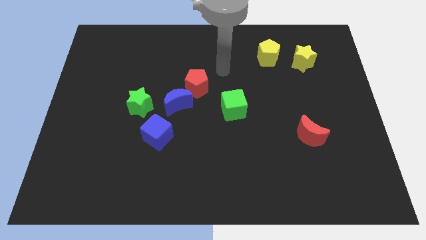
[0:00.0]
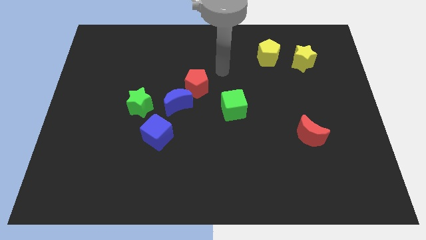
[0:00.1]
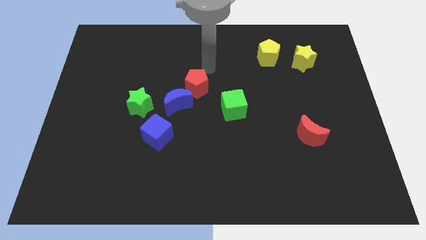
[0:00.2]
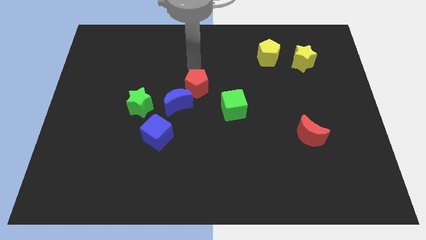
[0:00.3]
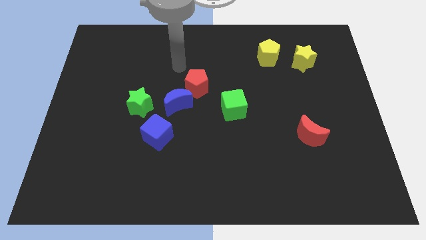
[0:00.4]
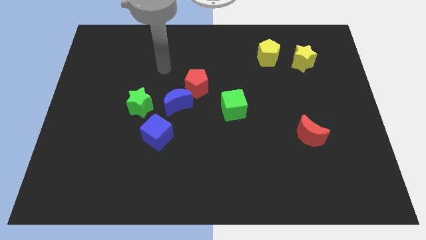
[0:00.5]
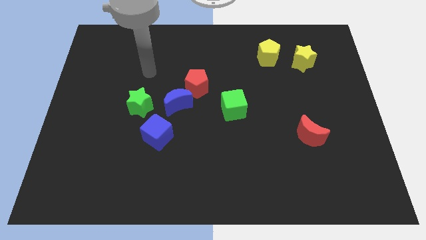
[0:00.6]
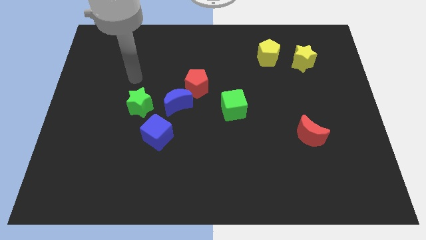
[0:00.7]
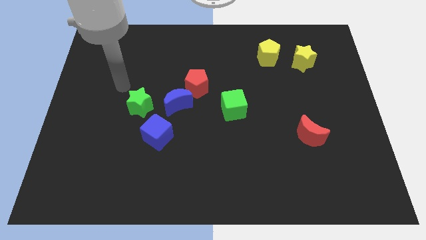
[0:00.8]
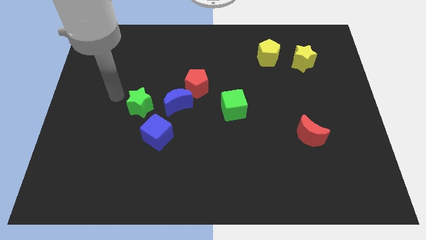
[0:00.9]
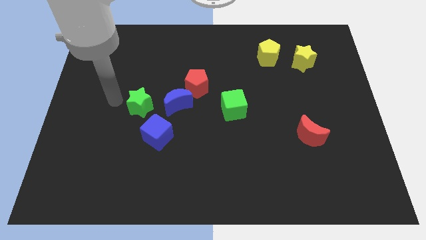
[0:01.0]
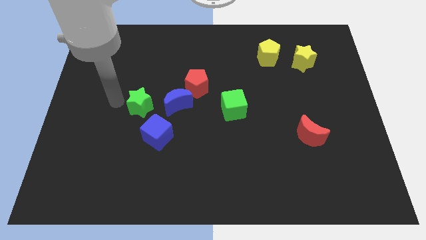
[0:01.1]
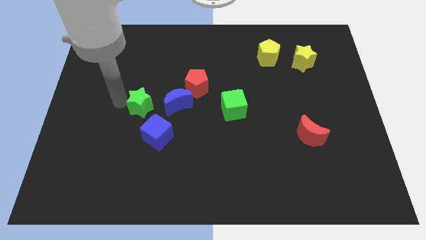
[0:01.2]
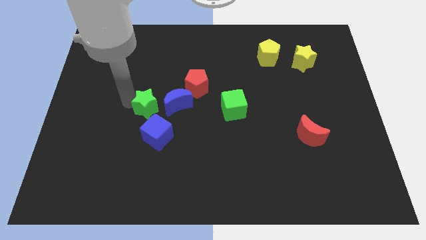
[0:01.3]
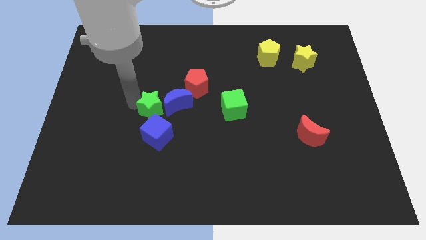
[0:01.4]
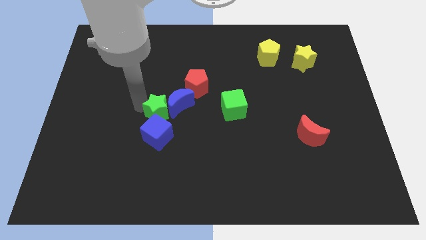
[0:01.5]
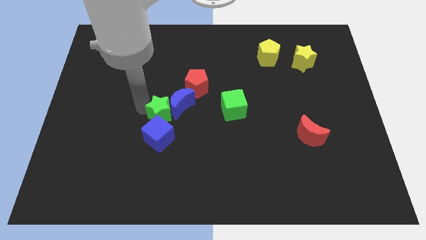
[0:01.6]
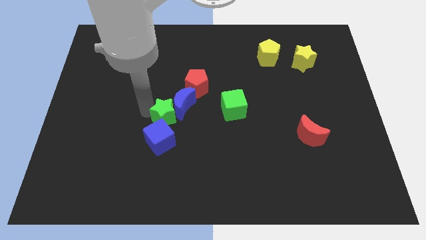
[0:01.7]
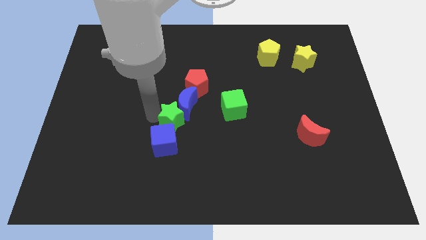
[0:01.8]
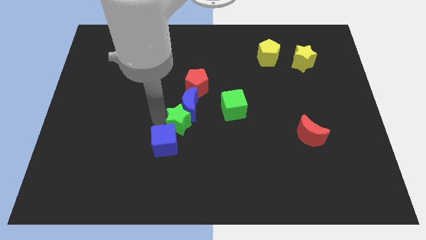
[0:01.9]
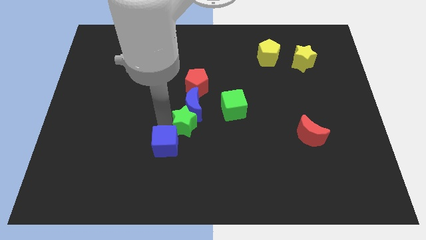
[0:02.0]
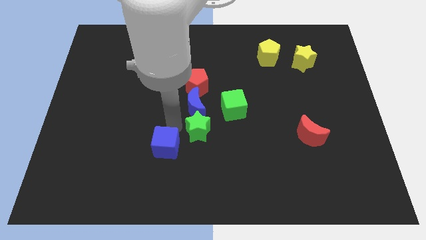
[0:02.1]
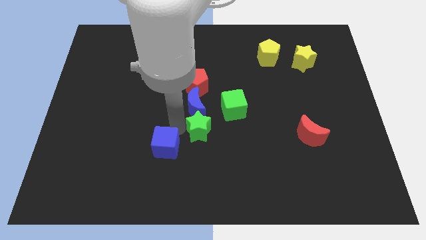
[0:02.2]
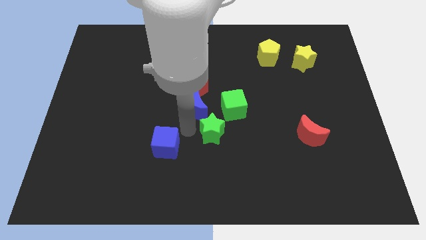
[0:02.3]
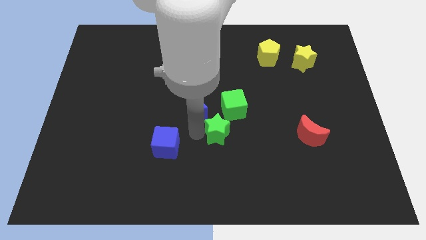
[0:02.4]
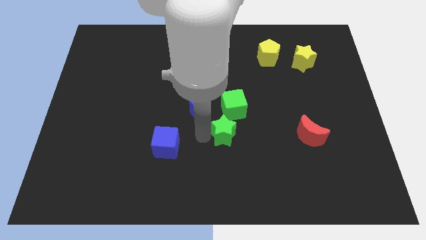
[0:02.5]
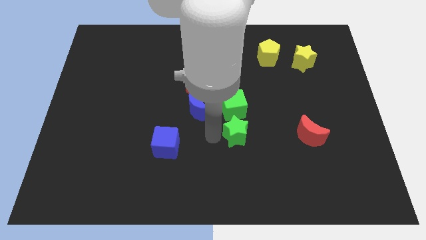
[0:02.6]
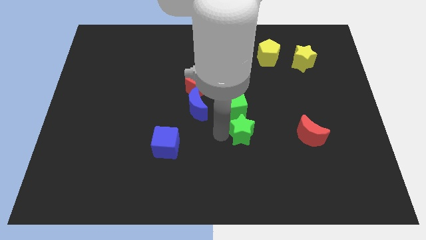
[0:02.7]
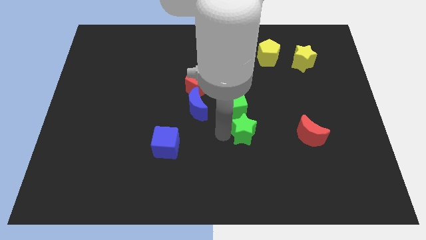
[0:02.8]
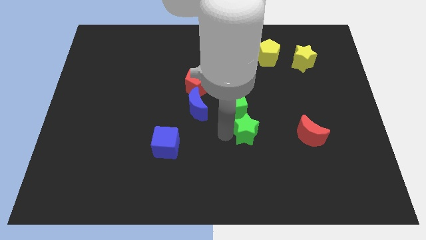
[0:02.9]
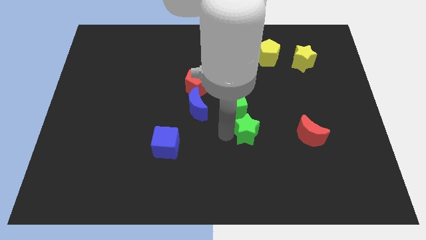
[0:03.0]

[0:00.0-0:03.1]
move the green star below to the green cube

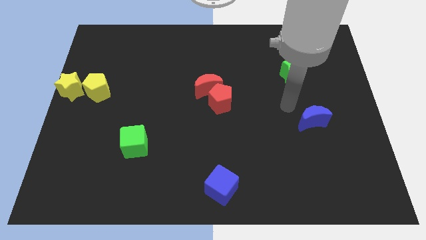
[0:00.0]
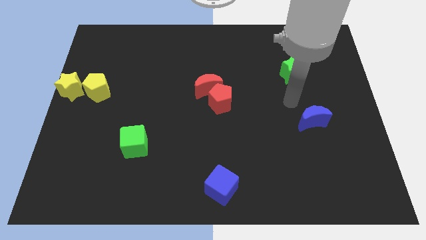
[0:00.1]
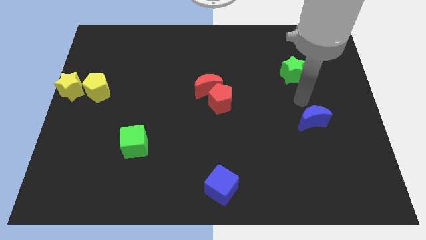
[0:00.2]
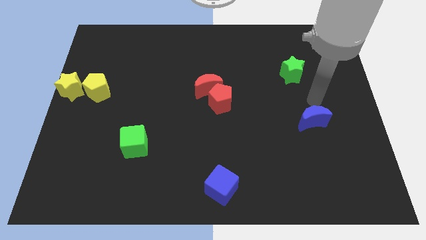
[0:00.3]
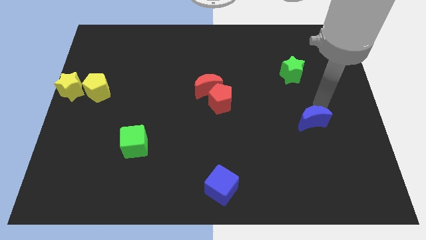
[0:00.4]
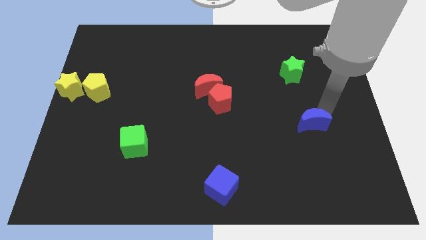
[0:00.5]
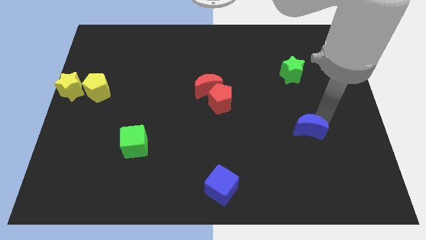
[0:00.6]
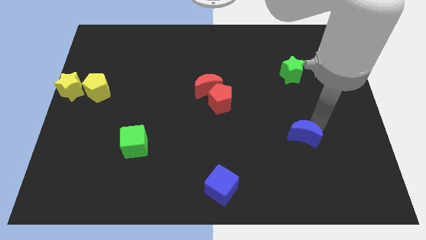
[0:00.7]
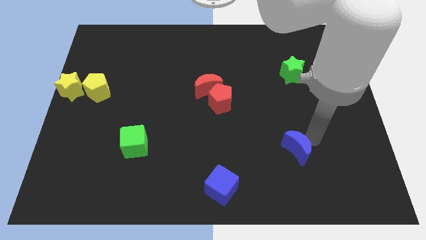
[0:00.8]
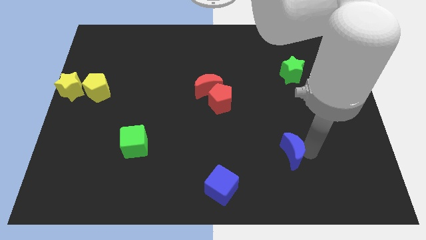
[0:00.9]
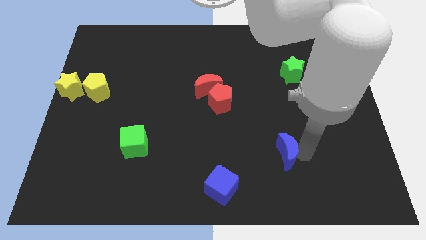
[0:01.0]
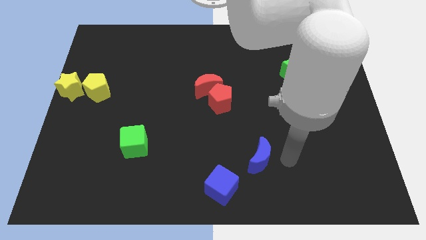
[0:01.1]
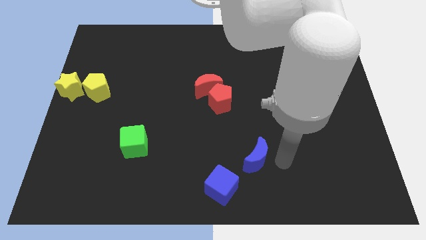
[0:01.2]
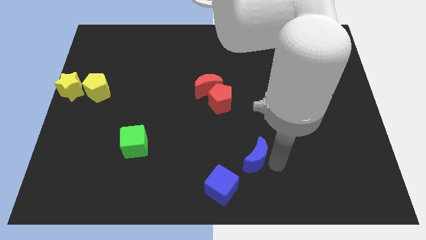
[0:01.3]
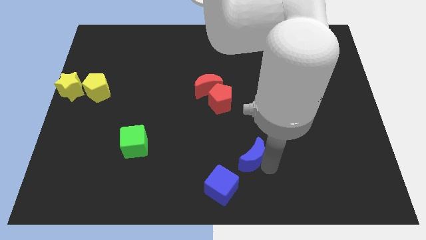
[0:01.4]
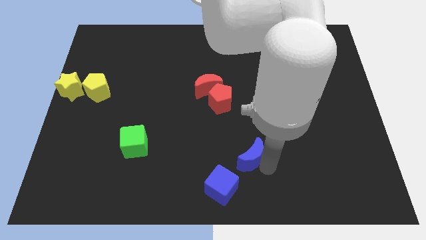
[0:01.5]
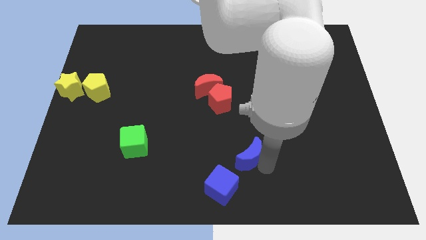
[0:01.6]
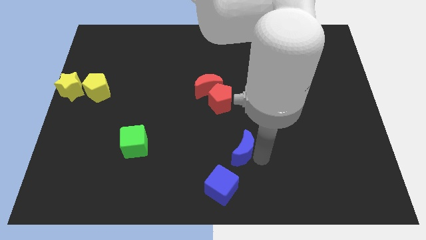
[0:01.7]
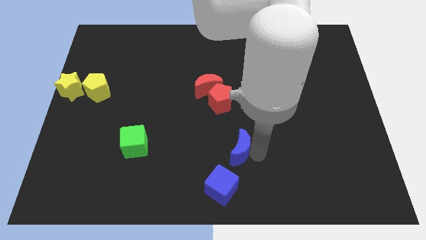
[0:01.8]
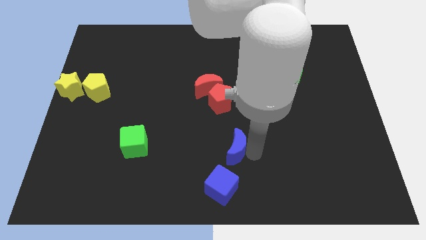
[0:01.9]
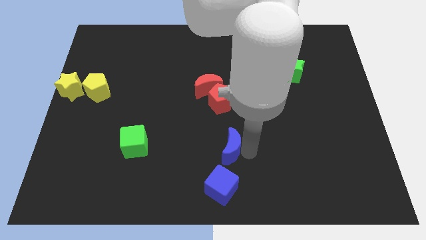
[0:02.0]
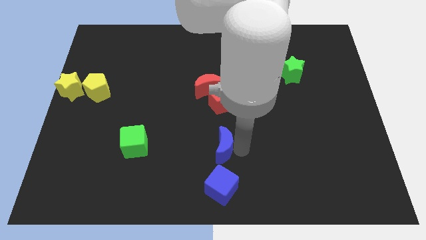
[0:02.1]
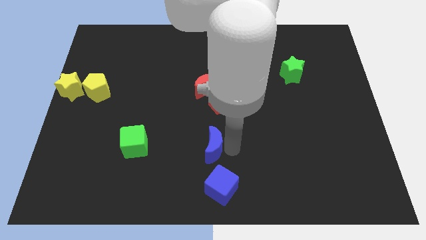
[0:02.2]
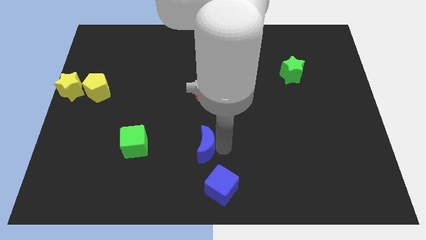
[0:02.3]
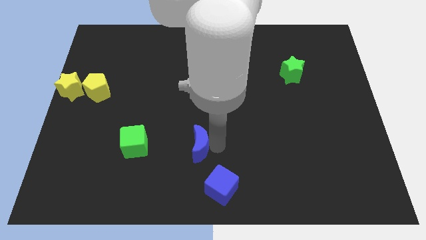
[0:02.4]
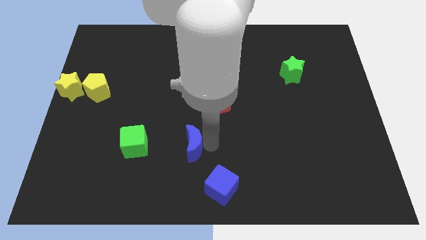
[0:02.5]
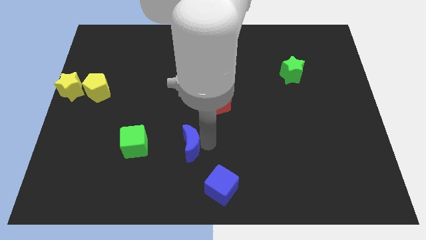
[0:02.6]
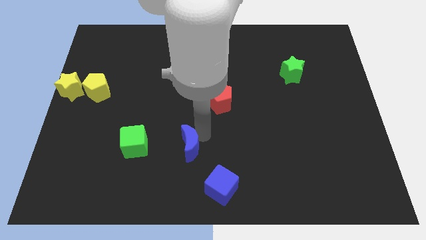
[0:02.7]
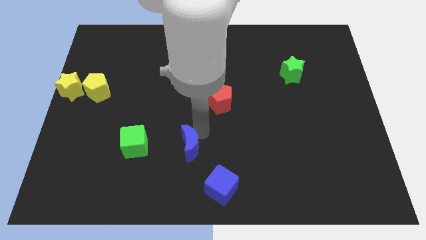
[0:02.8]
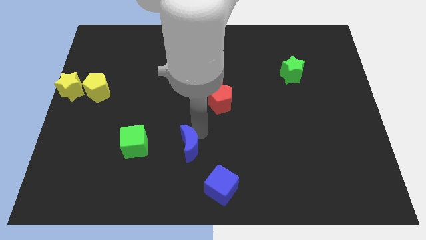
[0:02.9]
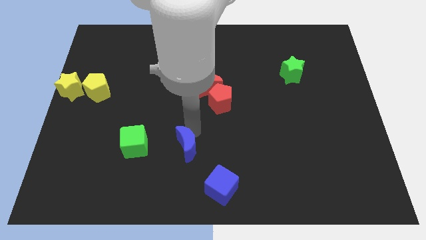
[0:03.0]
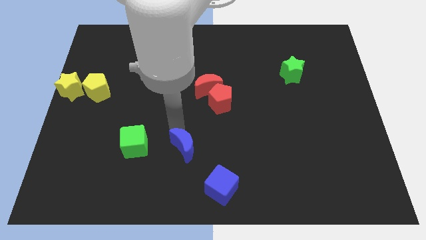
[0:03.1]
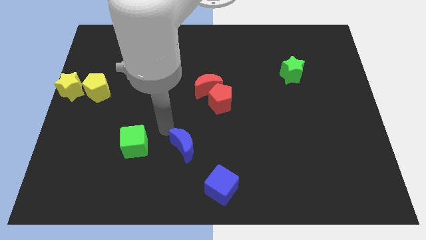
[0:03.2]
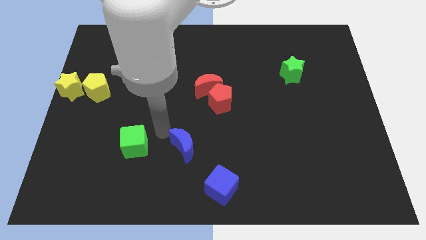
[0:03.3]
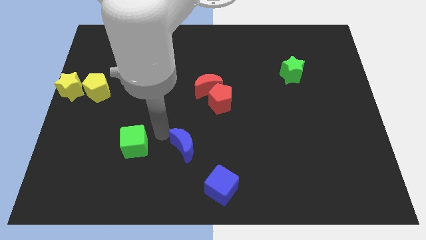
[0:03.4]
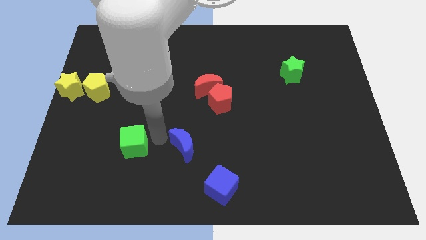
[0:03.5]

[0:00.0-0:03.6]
move blue crescent towards the green cube

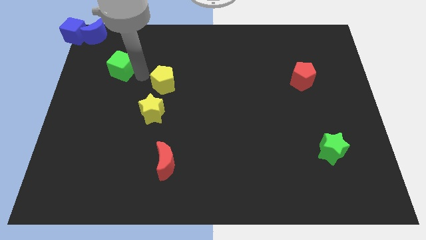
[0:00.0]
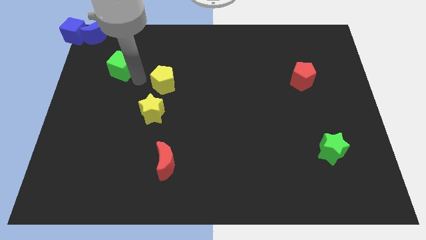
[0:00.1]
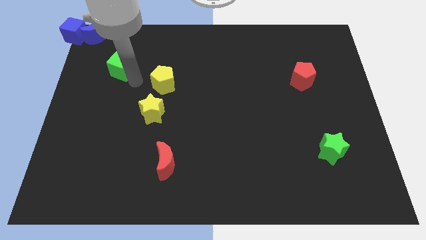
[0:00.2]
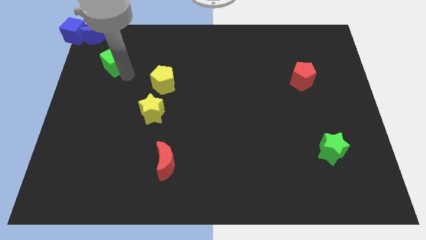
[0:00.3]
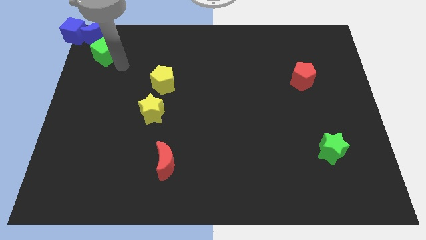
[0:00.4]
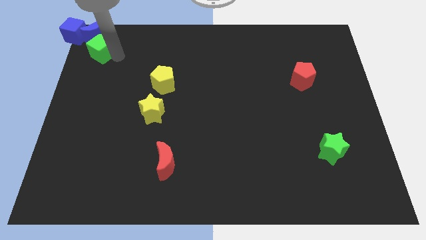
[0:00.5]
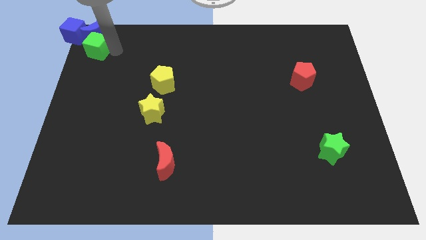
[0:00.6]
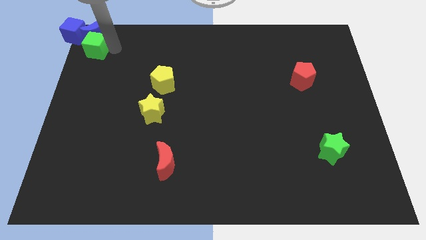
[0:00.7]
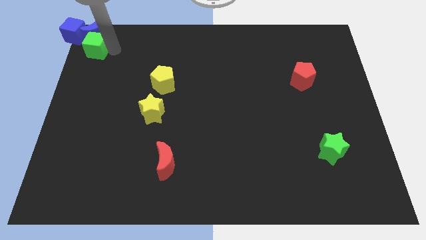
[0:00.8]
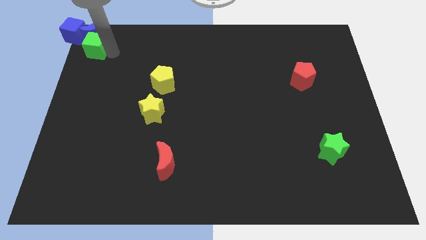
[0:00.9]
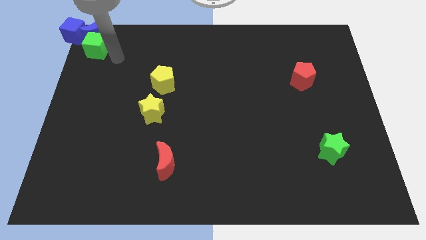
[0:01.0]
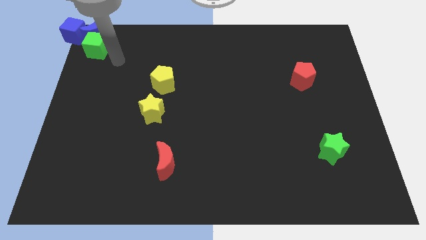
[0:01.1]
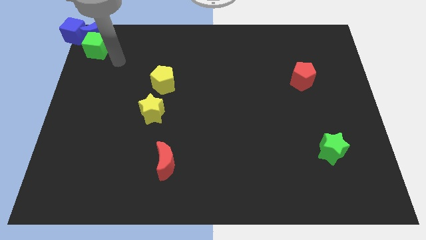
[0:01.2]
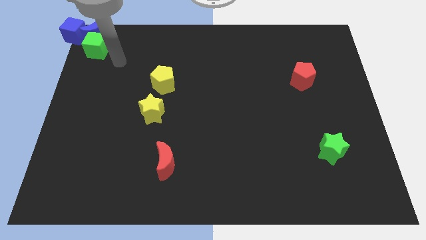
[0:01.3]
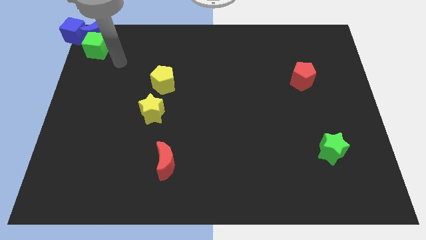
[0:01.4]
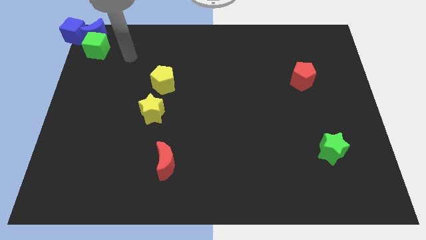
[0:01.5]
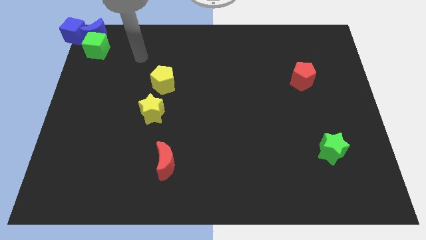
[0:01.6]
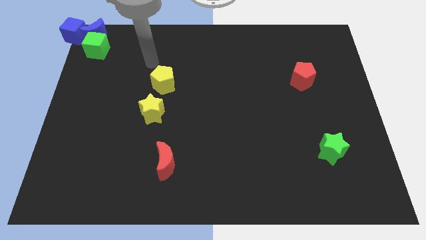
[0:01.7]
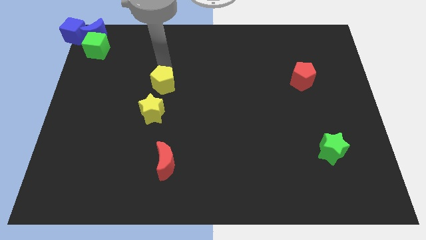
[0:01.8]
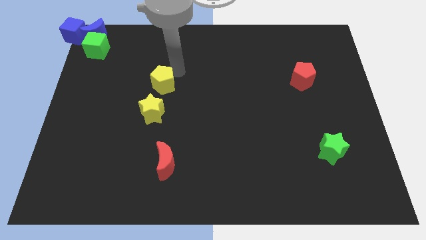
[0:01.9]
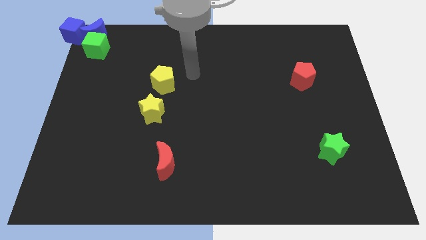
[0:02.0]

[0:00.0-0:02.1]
place the green cube to the bottom of blue crescent

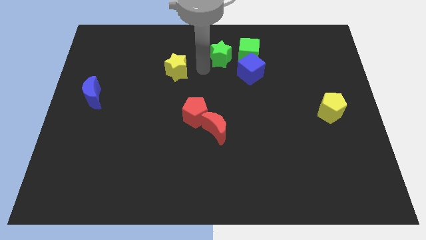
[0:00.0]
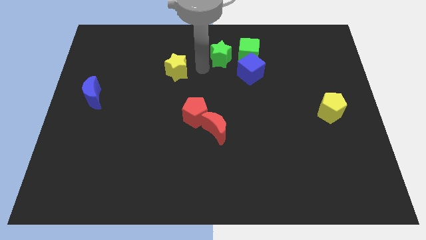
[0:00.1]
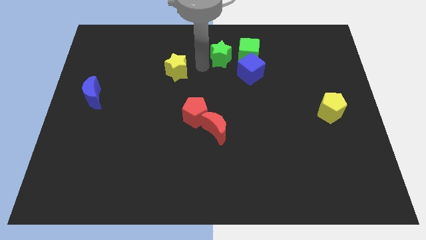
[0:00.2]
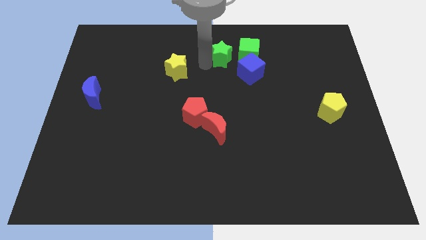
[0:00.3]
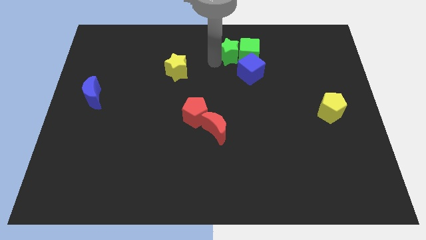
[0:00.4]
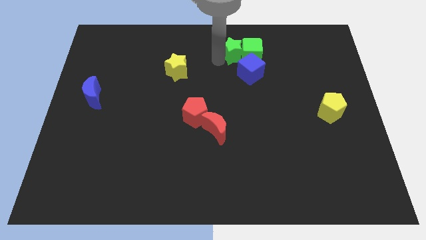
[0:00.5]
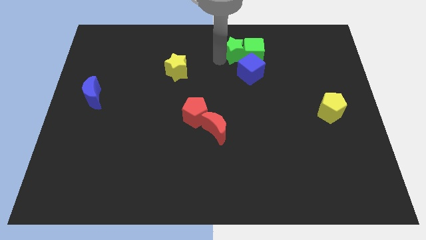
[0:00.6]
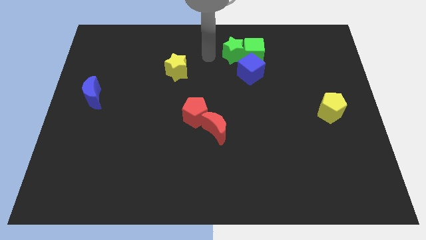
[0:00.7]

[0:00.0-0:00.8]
push the green star into green cube
